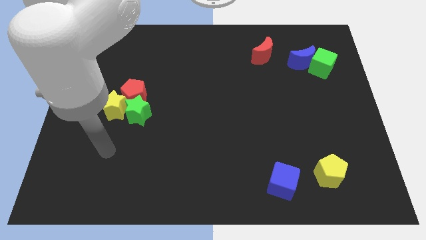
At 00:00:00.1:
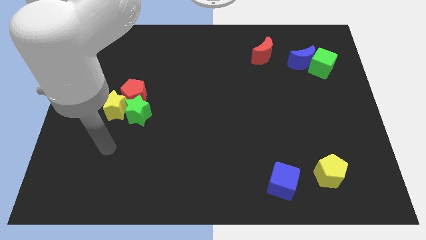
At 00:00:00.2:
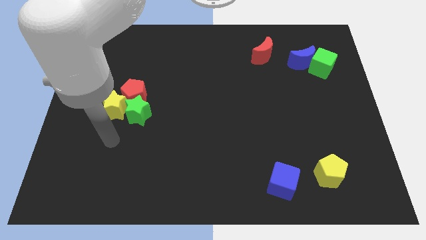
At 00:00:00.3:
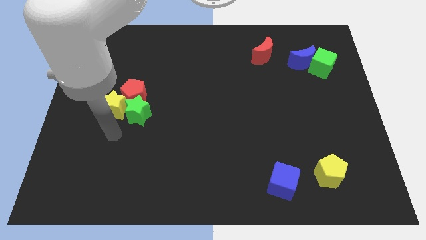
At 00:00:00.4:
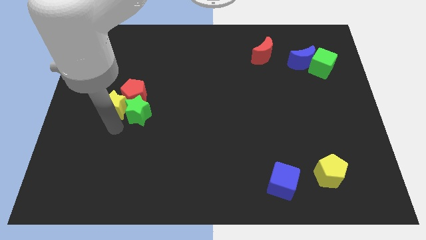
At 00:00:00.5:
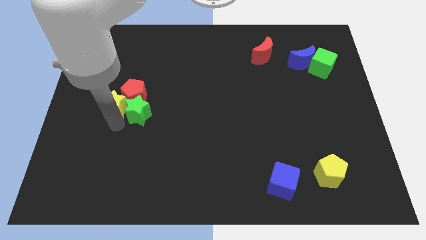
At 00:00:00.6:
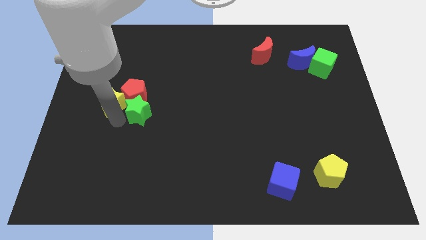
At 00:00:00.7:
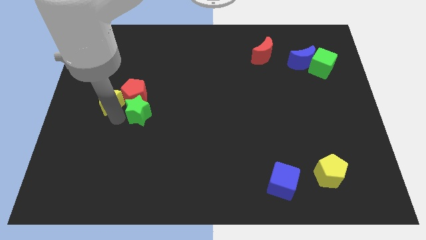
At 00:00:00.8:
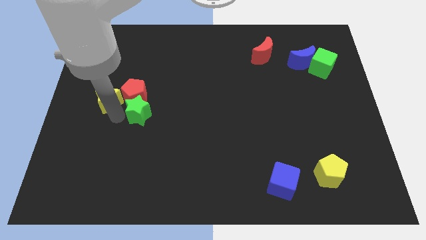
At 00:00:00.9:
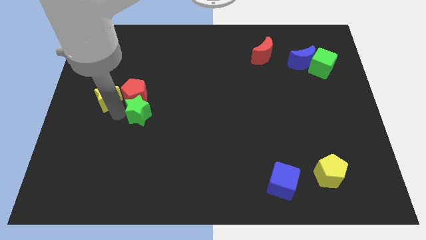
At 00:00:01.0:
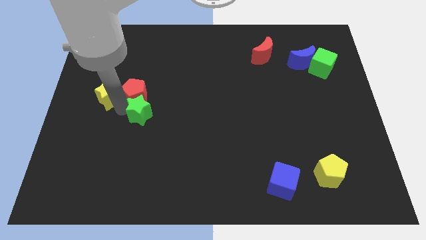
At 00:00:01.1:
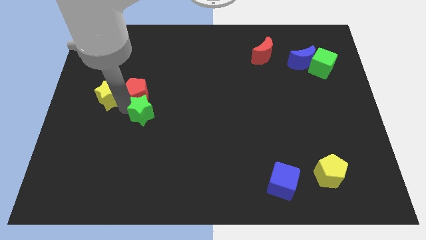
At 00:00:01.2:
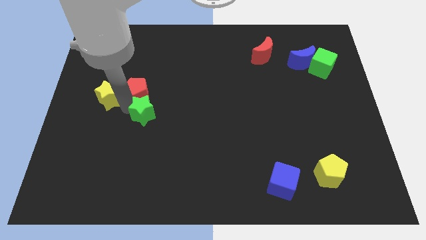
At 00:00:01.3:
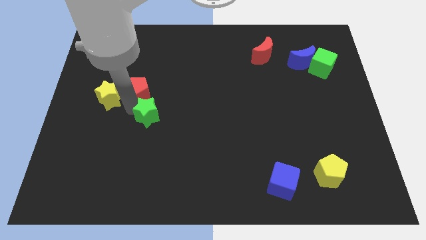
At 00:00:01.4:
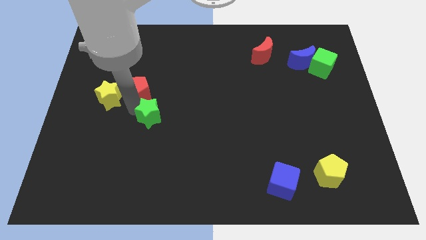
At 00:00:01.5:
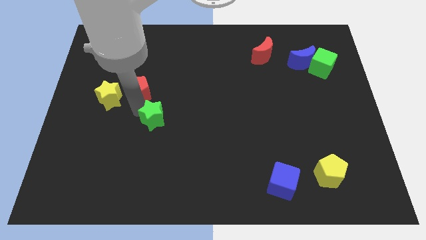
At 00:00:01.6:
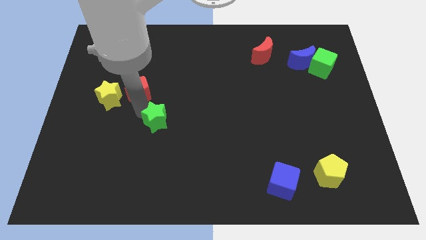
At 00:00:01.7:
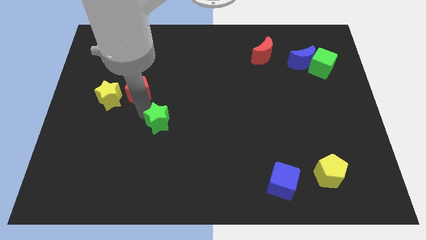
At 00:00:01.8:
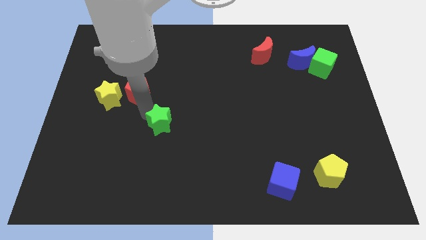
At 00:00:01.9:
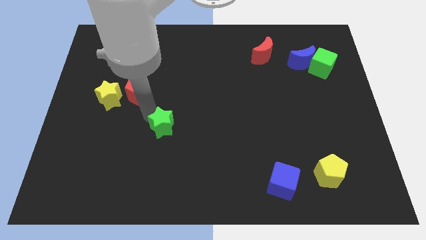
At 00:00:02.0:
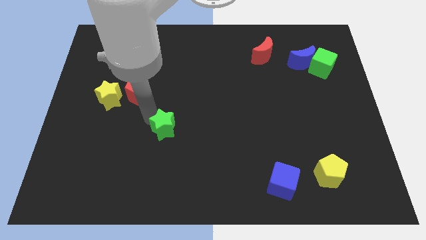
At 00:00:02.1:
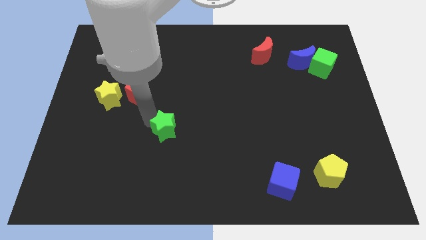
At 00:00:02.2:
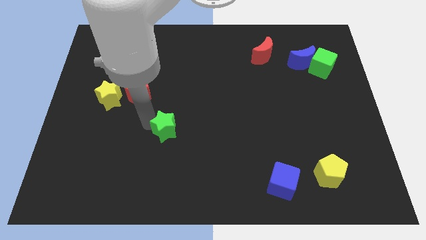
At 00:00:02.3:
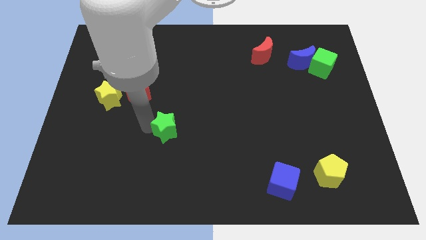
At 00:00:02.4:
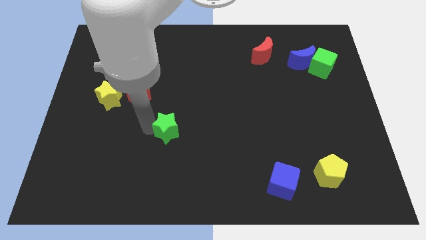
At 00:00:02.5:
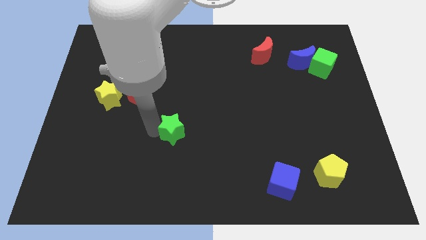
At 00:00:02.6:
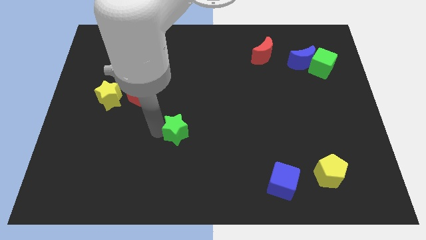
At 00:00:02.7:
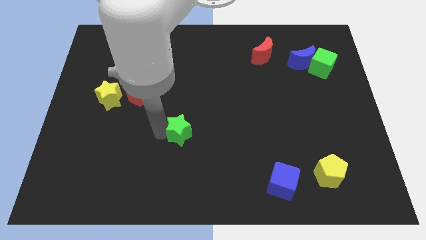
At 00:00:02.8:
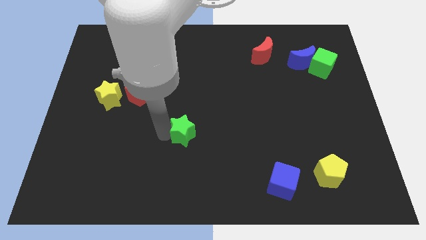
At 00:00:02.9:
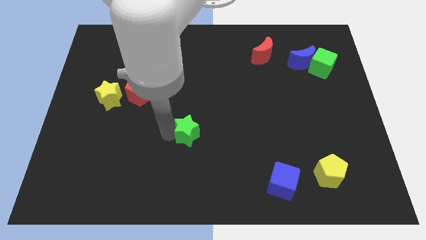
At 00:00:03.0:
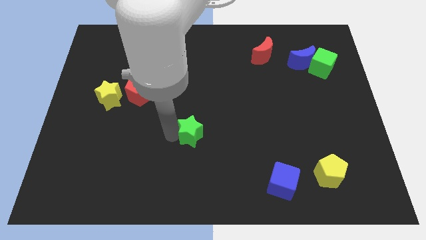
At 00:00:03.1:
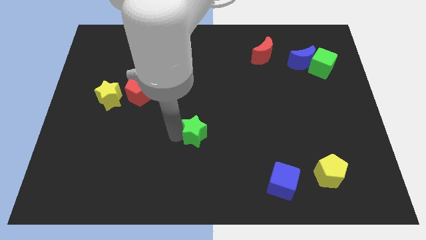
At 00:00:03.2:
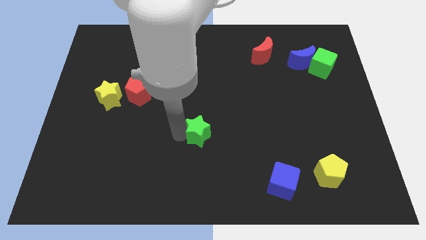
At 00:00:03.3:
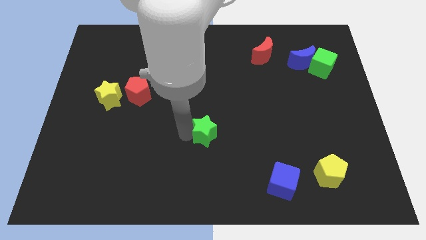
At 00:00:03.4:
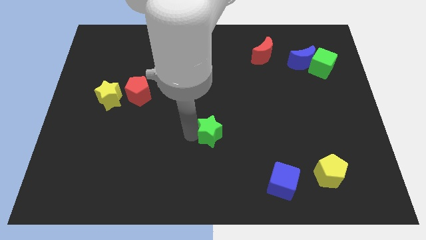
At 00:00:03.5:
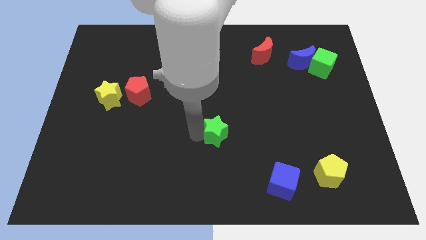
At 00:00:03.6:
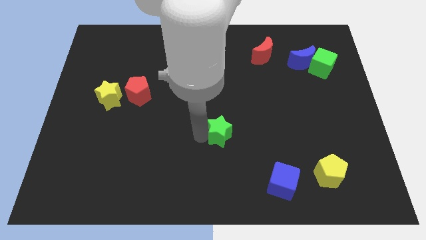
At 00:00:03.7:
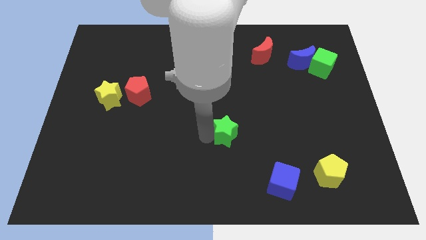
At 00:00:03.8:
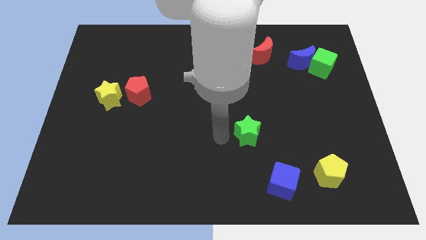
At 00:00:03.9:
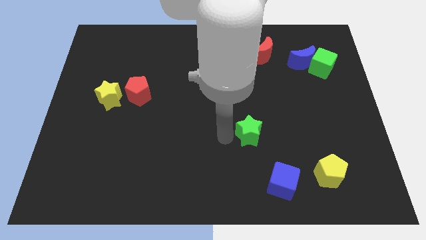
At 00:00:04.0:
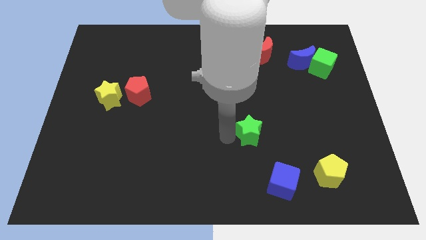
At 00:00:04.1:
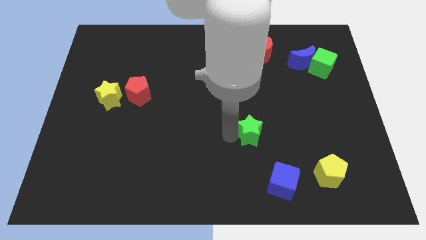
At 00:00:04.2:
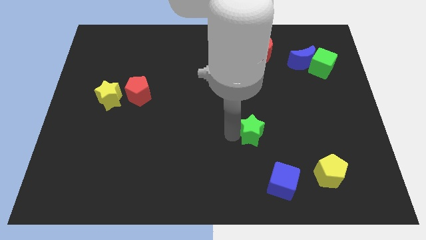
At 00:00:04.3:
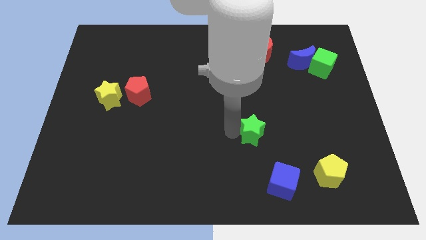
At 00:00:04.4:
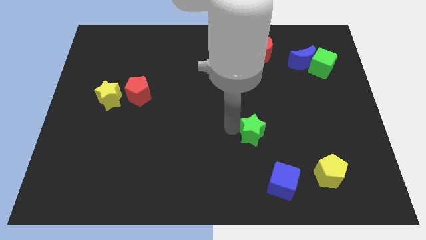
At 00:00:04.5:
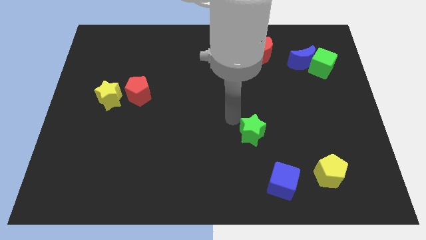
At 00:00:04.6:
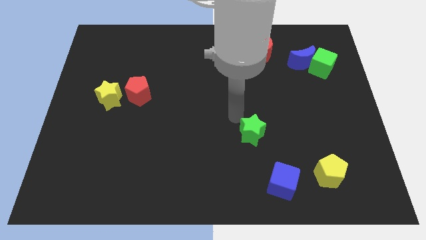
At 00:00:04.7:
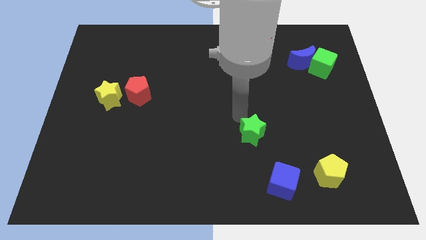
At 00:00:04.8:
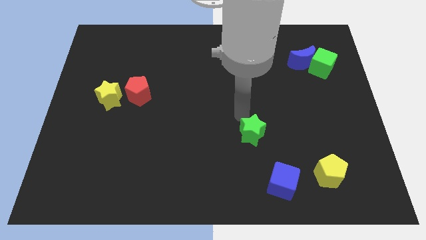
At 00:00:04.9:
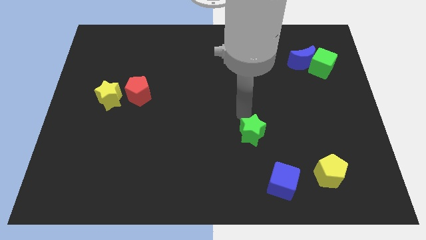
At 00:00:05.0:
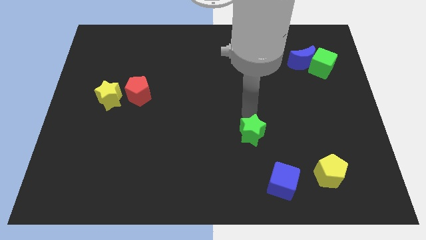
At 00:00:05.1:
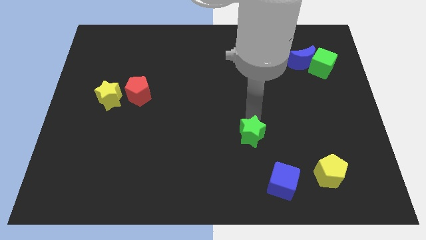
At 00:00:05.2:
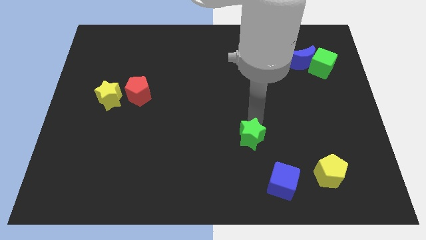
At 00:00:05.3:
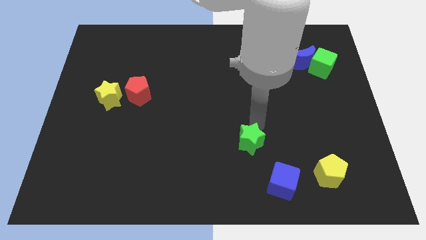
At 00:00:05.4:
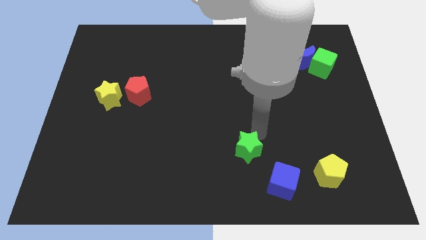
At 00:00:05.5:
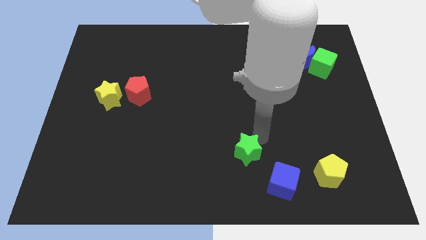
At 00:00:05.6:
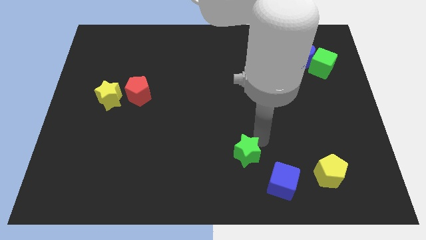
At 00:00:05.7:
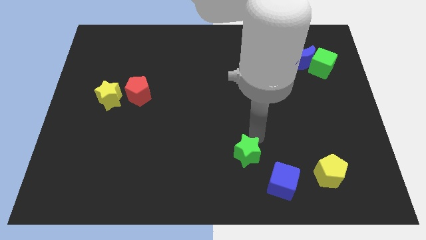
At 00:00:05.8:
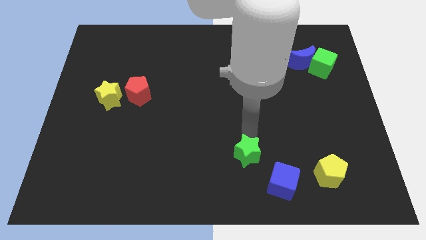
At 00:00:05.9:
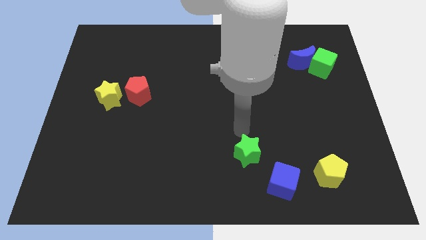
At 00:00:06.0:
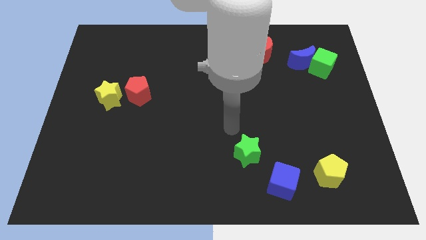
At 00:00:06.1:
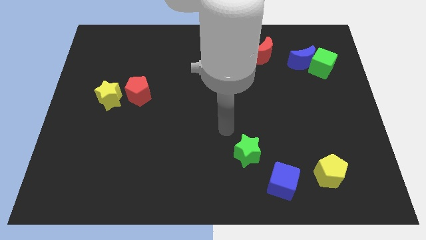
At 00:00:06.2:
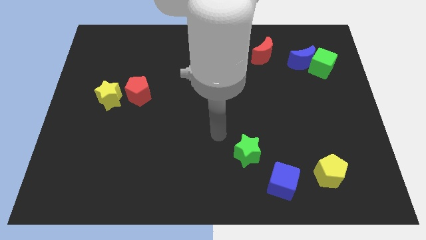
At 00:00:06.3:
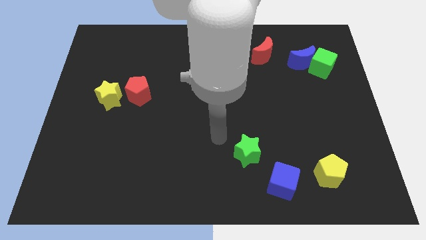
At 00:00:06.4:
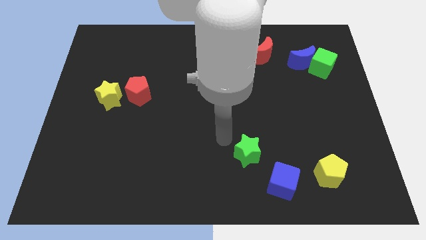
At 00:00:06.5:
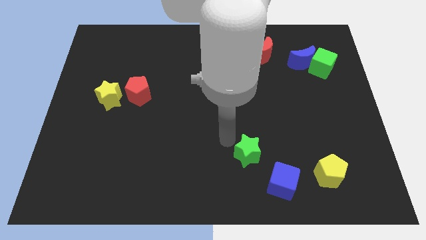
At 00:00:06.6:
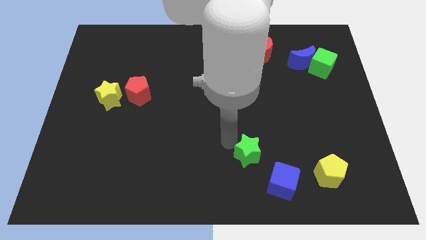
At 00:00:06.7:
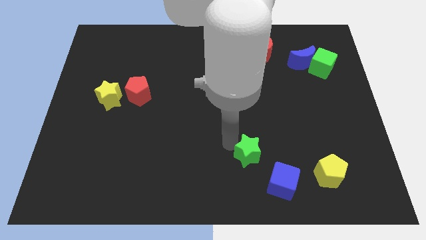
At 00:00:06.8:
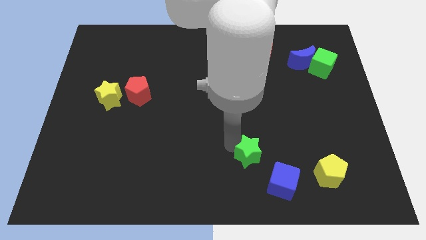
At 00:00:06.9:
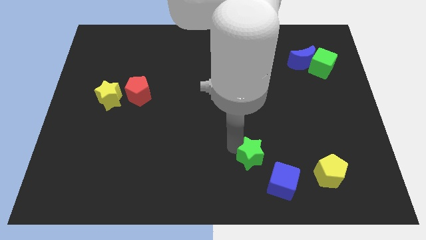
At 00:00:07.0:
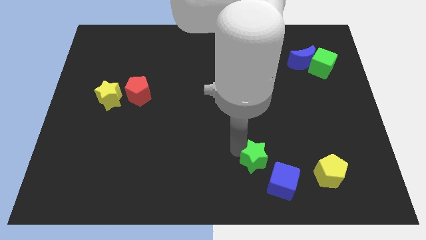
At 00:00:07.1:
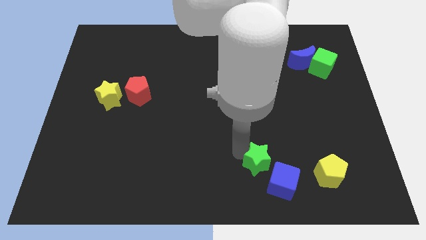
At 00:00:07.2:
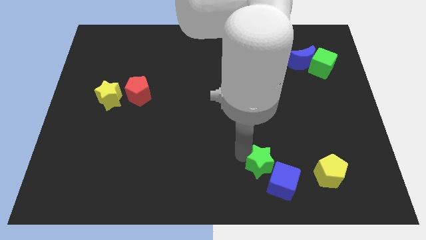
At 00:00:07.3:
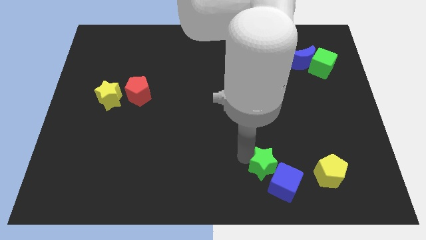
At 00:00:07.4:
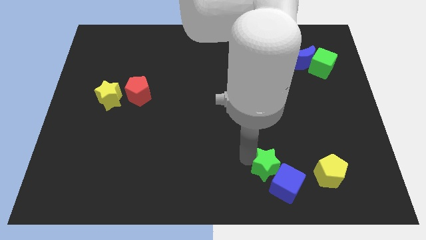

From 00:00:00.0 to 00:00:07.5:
slide the green star towards the blue cube

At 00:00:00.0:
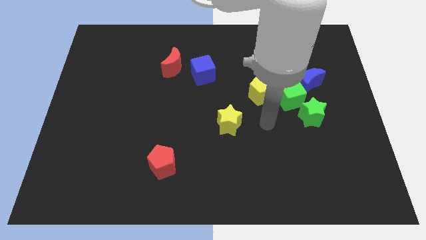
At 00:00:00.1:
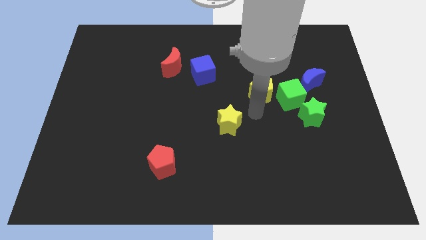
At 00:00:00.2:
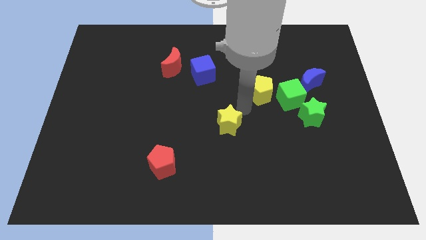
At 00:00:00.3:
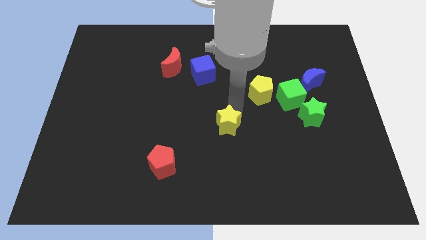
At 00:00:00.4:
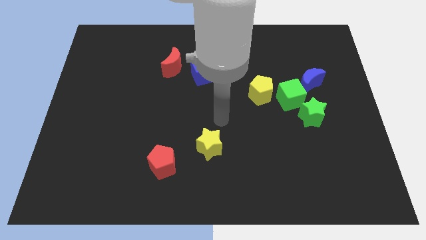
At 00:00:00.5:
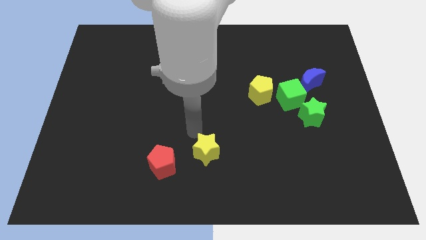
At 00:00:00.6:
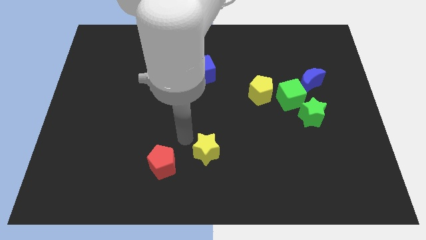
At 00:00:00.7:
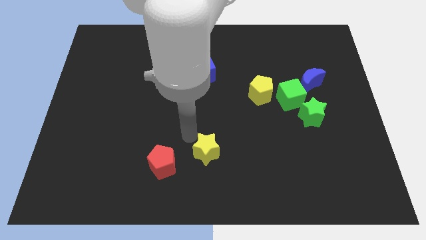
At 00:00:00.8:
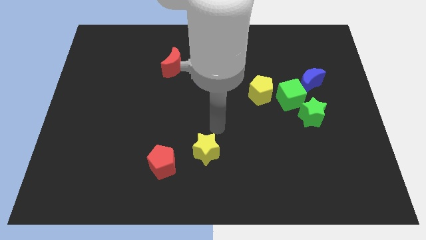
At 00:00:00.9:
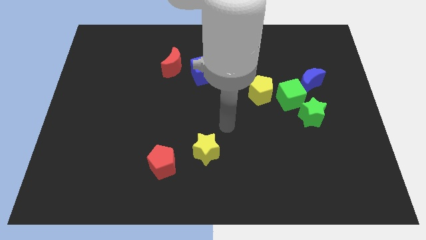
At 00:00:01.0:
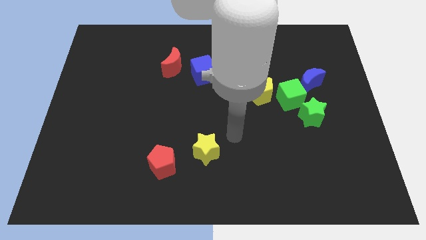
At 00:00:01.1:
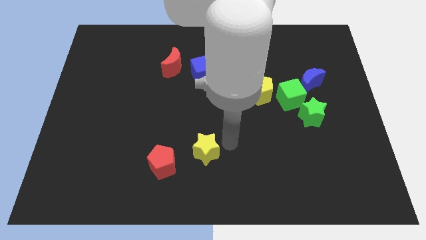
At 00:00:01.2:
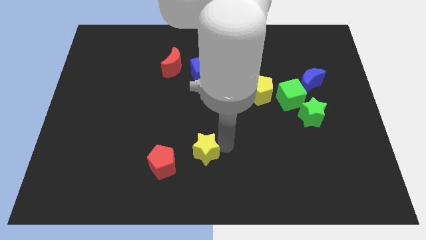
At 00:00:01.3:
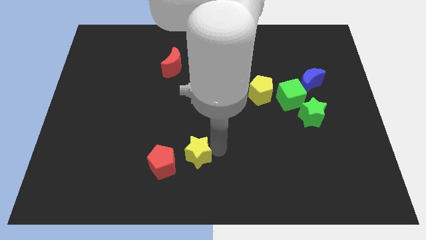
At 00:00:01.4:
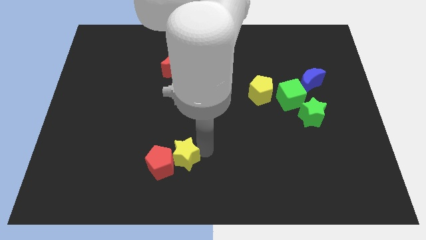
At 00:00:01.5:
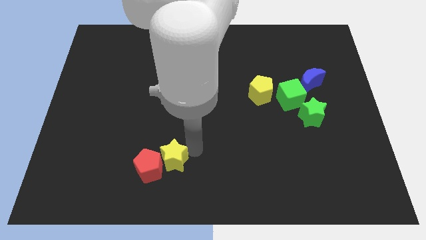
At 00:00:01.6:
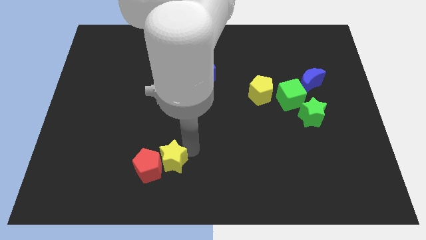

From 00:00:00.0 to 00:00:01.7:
move the yellow star to the red pentagon
